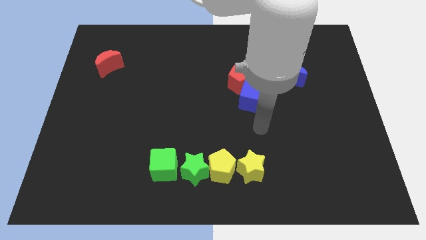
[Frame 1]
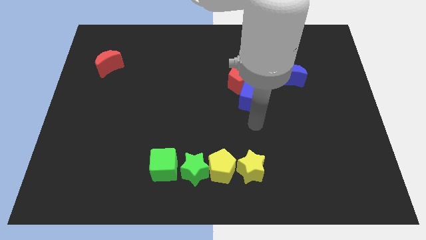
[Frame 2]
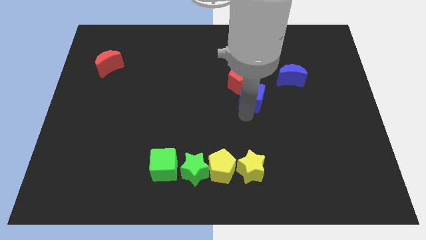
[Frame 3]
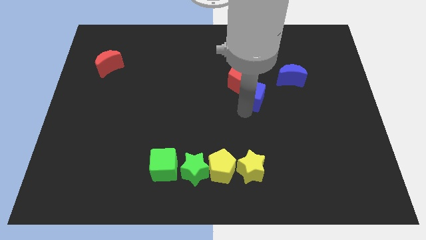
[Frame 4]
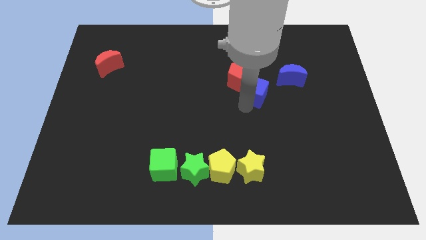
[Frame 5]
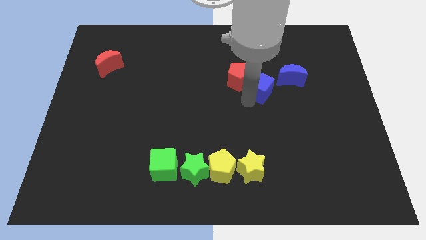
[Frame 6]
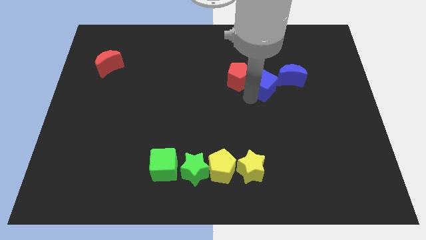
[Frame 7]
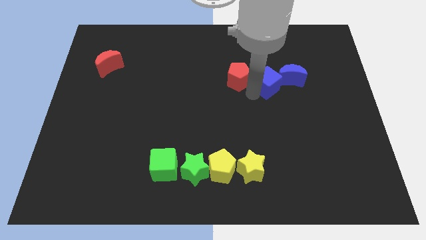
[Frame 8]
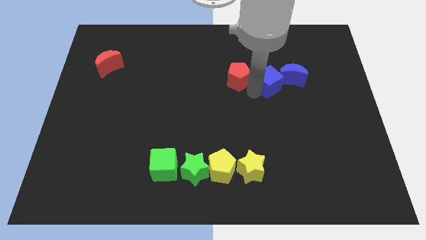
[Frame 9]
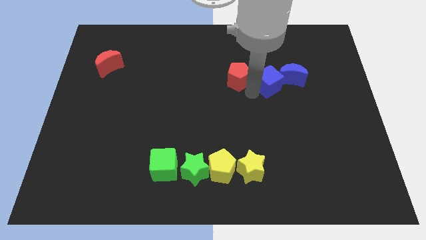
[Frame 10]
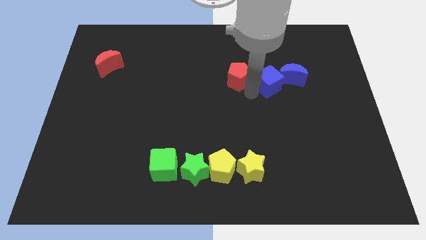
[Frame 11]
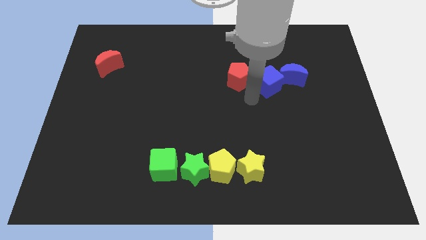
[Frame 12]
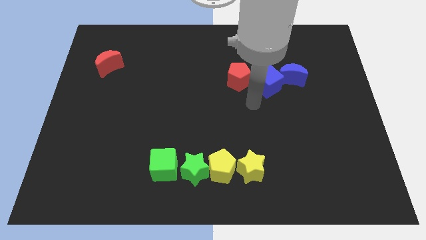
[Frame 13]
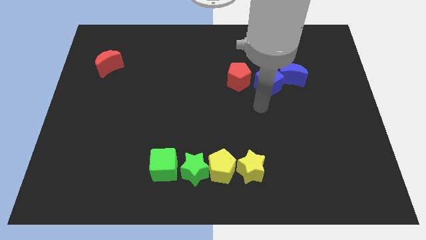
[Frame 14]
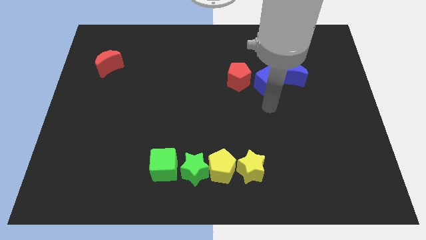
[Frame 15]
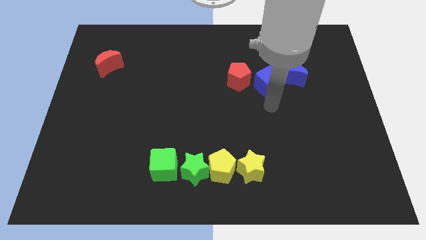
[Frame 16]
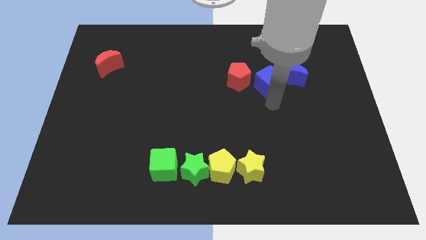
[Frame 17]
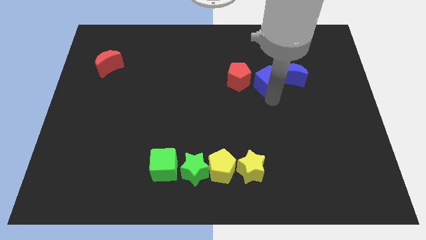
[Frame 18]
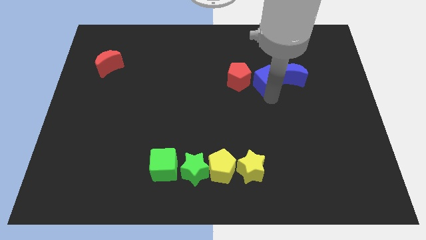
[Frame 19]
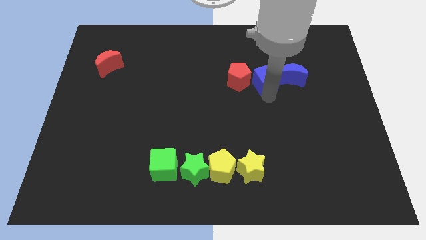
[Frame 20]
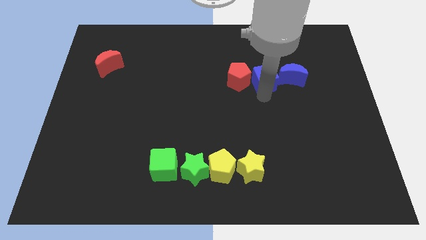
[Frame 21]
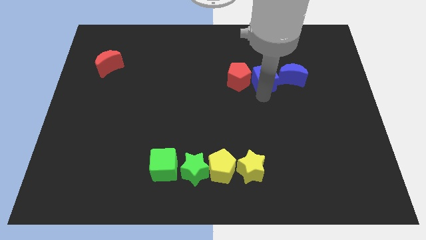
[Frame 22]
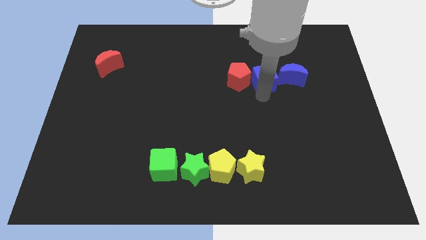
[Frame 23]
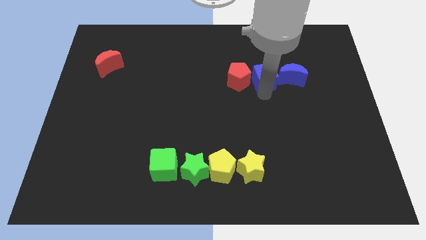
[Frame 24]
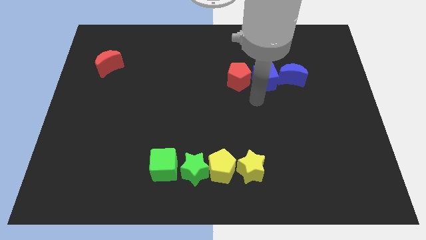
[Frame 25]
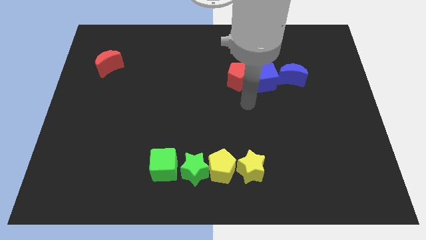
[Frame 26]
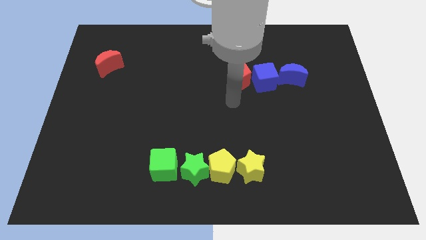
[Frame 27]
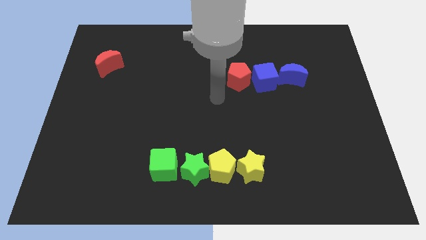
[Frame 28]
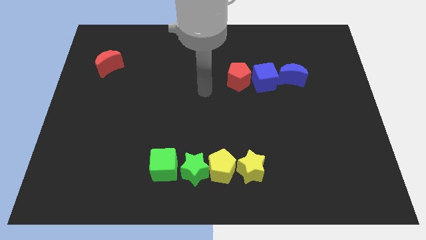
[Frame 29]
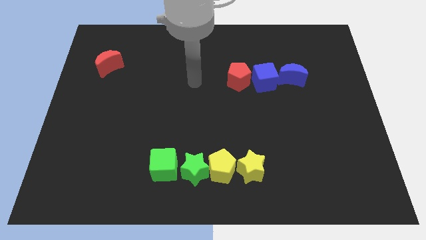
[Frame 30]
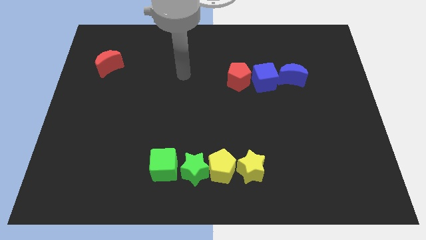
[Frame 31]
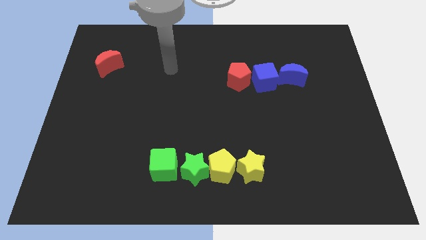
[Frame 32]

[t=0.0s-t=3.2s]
make a horizontal line out of blue blocks and the red pentagon

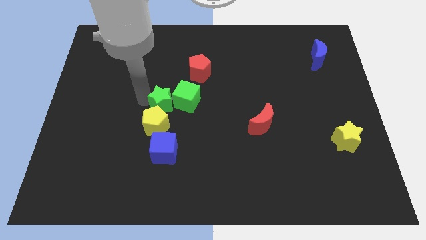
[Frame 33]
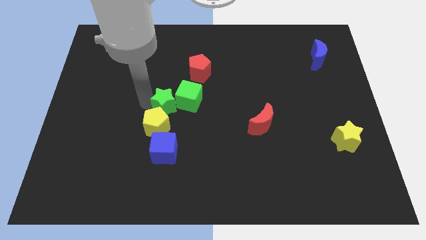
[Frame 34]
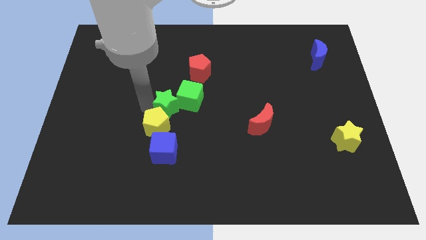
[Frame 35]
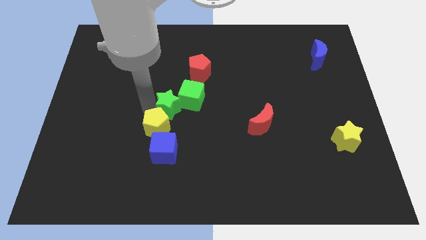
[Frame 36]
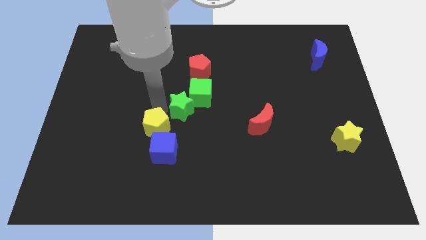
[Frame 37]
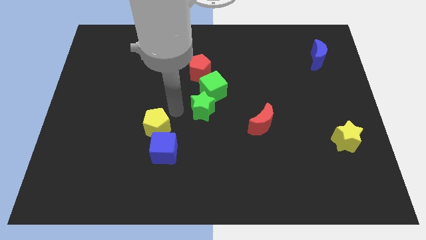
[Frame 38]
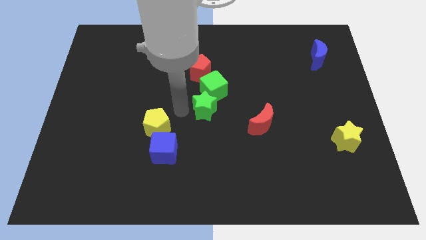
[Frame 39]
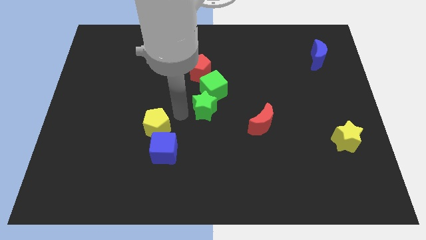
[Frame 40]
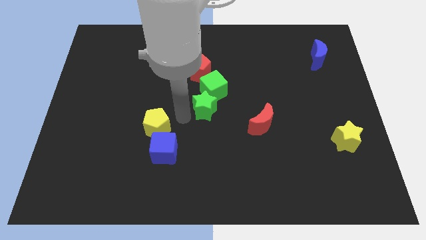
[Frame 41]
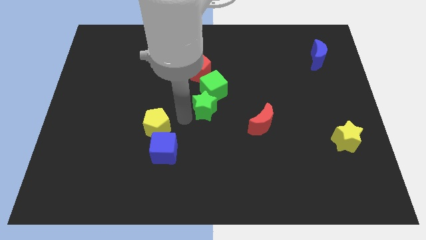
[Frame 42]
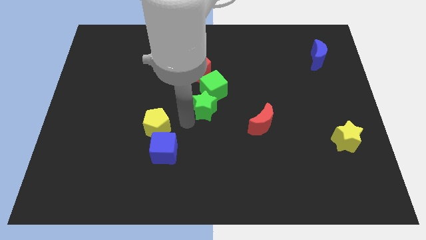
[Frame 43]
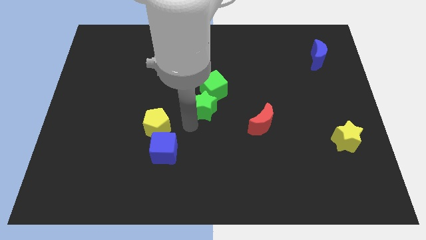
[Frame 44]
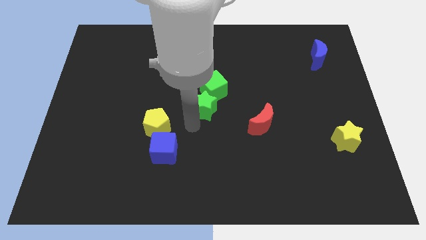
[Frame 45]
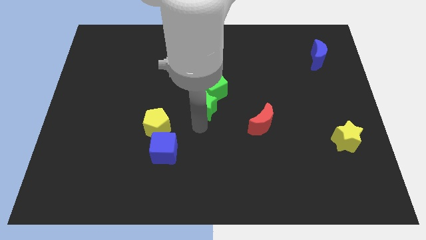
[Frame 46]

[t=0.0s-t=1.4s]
move the green star along with the green cube away from the yellow pentagon

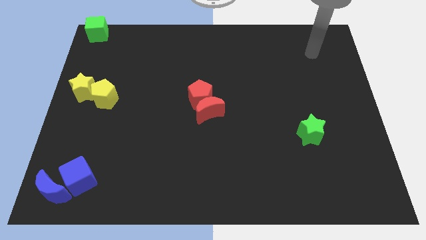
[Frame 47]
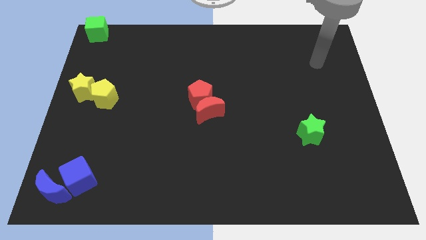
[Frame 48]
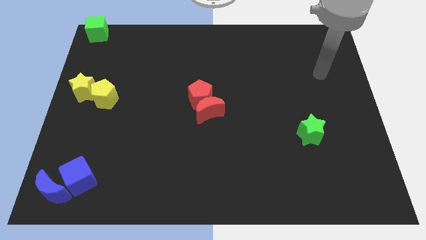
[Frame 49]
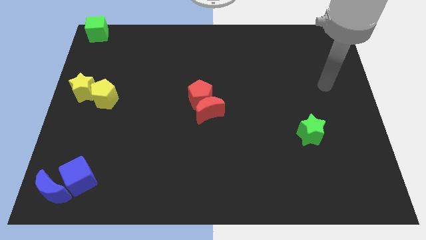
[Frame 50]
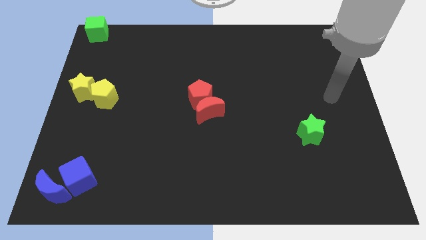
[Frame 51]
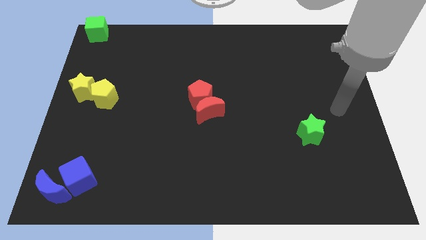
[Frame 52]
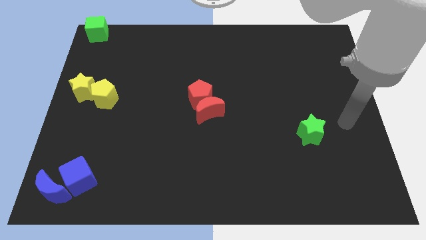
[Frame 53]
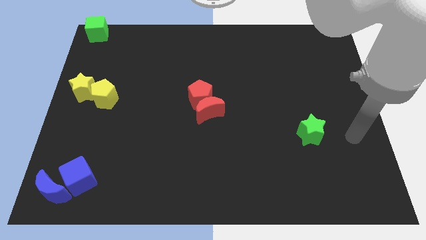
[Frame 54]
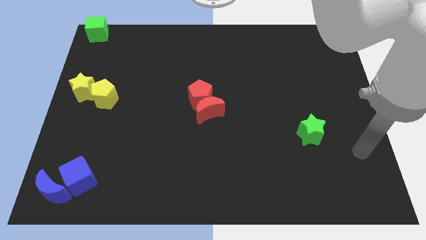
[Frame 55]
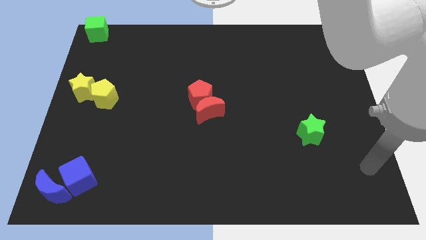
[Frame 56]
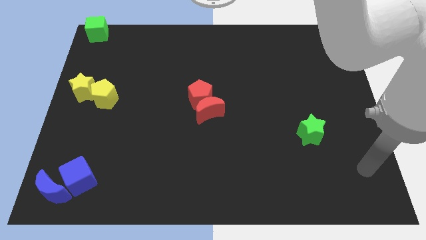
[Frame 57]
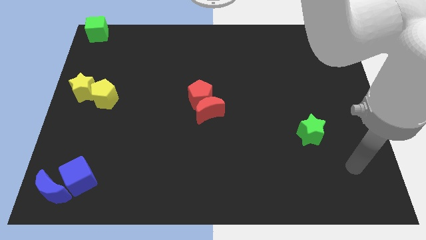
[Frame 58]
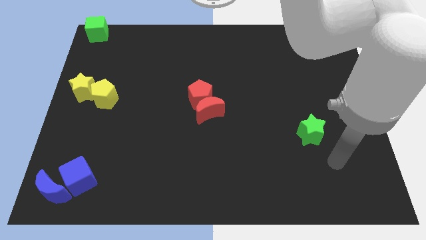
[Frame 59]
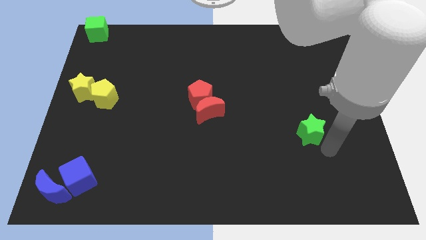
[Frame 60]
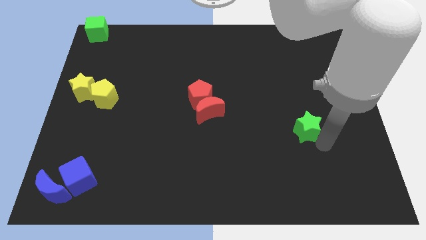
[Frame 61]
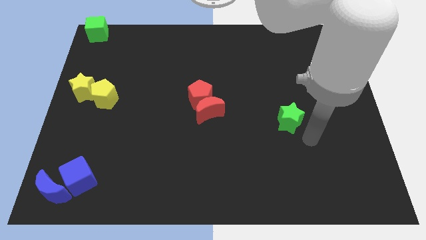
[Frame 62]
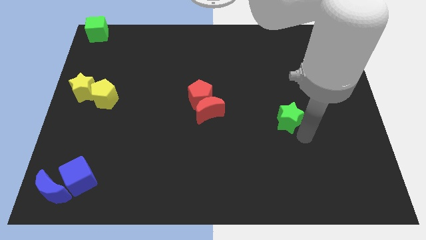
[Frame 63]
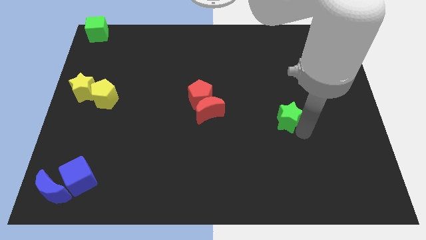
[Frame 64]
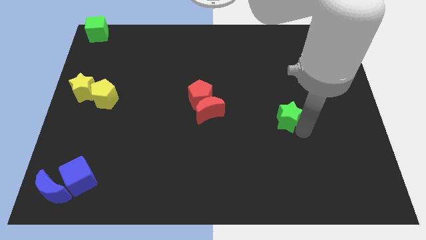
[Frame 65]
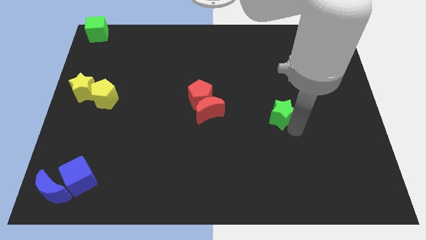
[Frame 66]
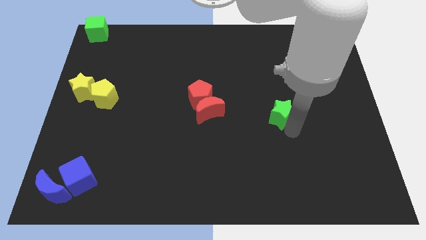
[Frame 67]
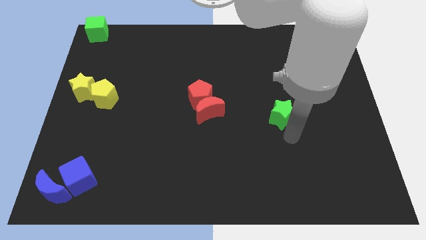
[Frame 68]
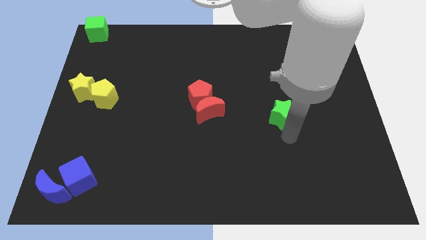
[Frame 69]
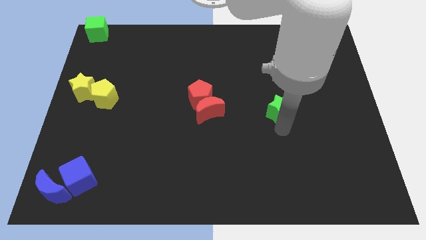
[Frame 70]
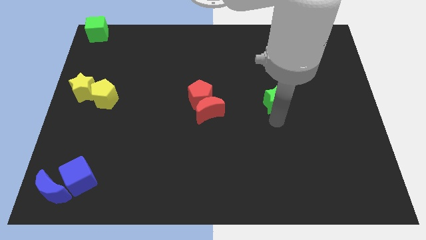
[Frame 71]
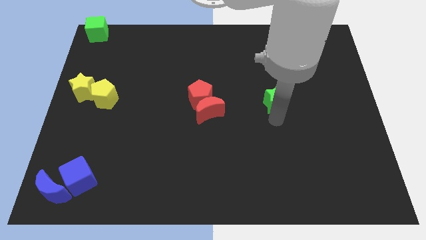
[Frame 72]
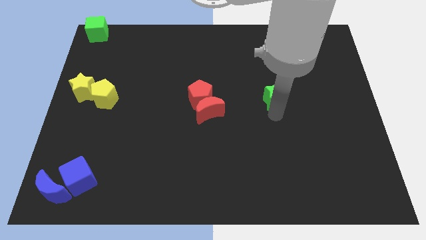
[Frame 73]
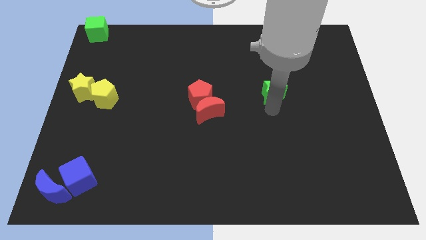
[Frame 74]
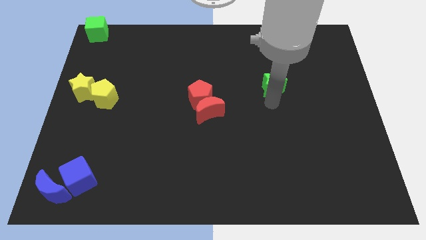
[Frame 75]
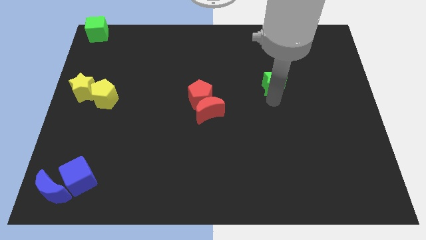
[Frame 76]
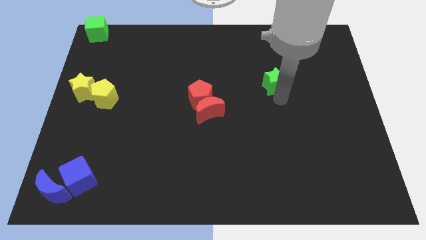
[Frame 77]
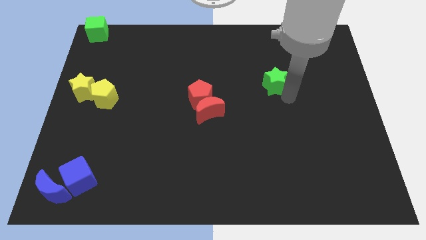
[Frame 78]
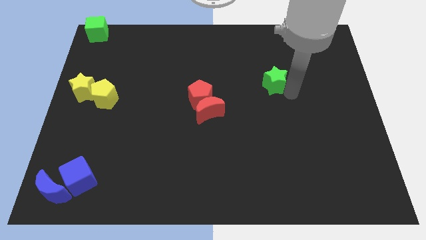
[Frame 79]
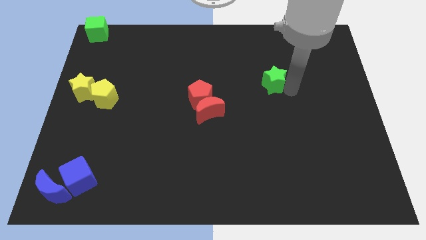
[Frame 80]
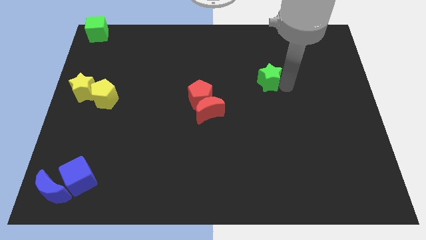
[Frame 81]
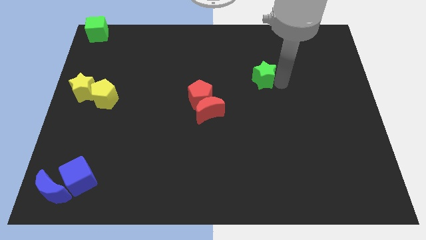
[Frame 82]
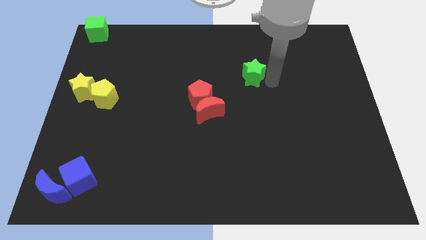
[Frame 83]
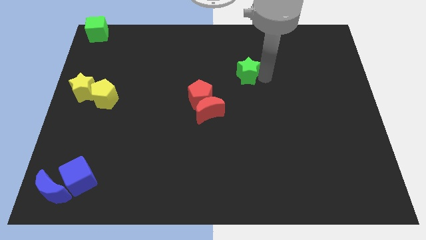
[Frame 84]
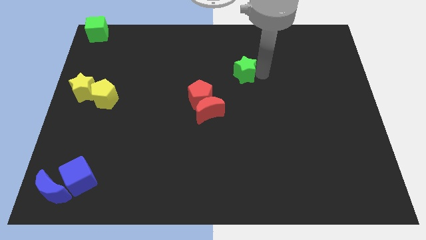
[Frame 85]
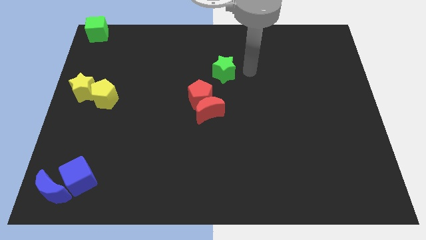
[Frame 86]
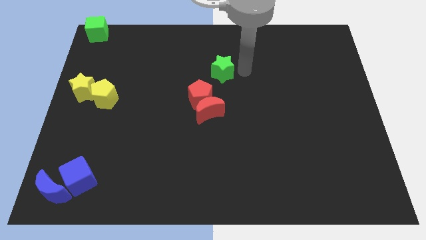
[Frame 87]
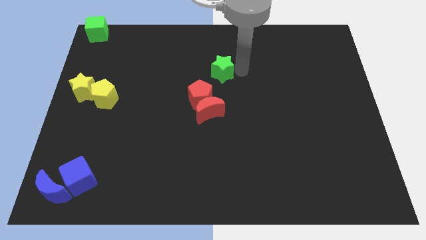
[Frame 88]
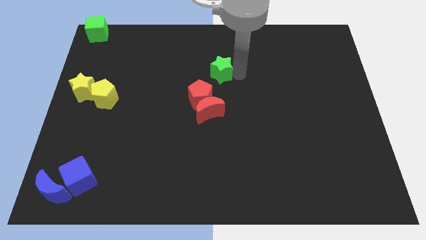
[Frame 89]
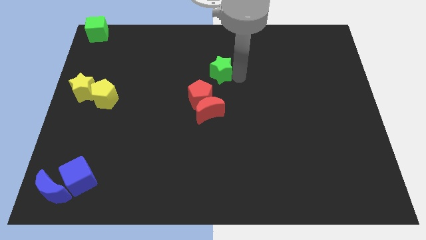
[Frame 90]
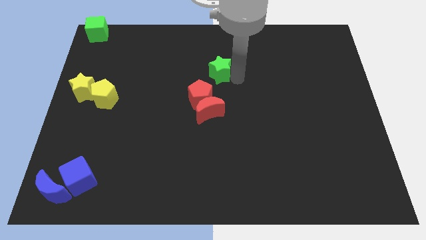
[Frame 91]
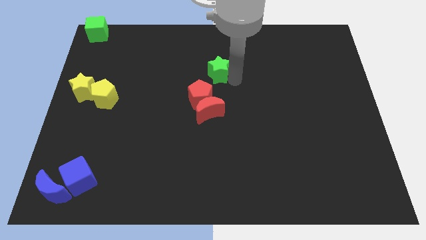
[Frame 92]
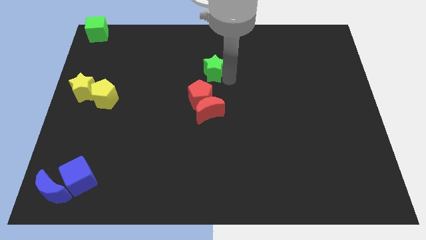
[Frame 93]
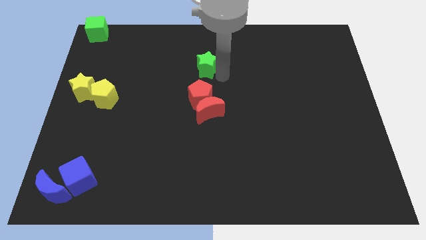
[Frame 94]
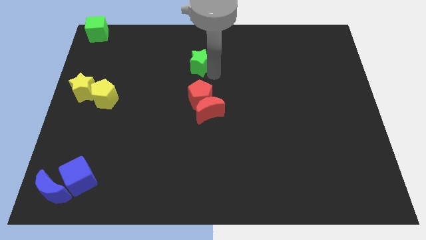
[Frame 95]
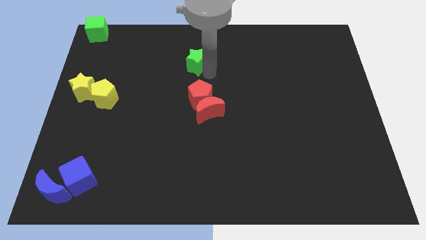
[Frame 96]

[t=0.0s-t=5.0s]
put the green star above the red pentagon
